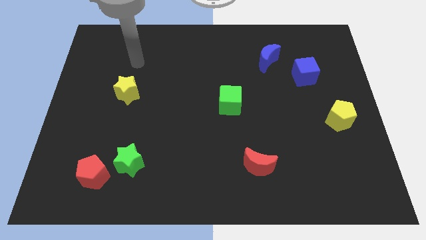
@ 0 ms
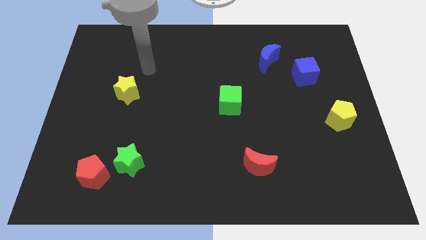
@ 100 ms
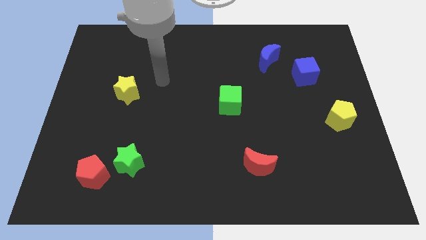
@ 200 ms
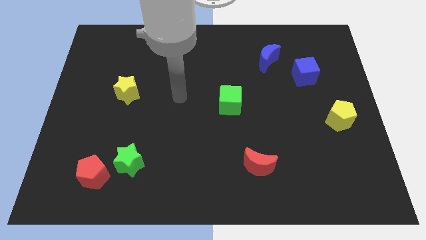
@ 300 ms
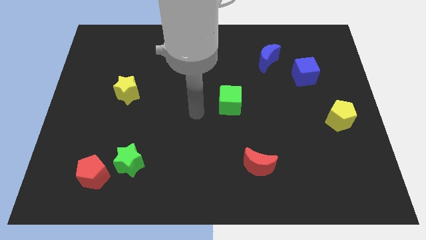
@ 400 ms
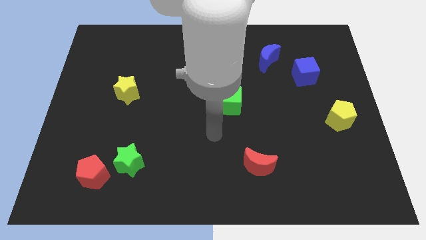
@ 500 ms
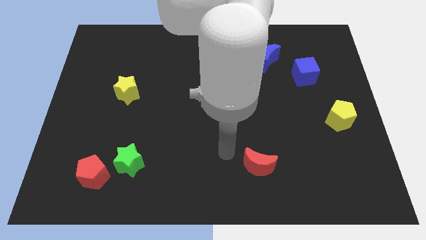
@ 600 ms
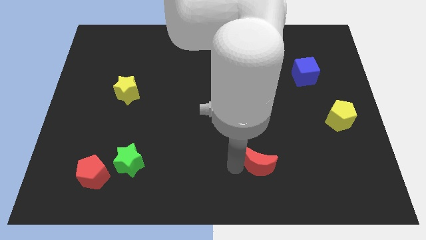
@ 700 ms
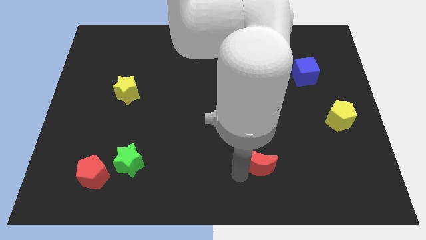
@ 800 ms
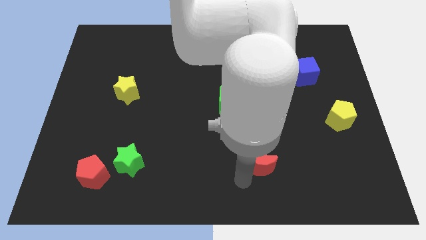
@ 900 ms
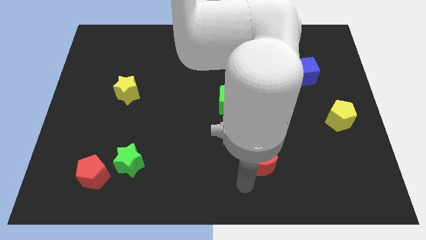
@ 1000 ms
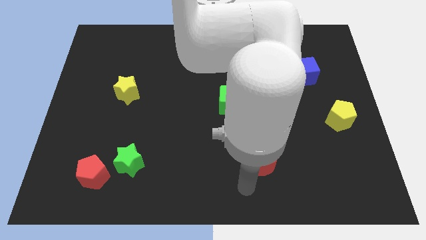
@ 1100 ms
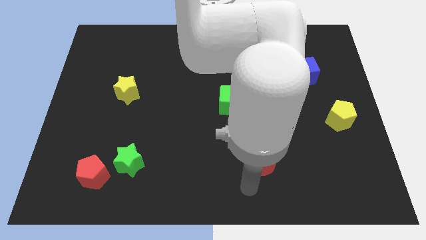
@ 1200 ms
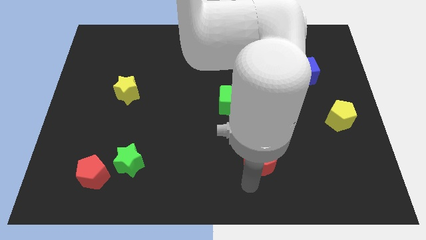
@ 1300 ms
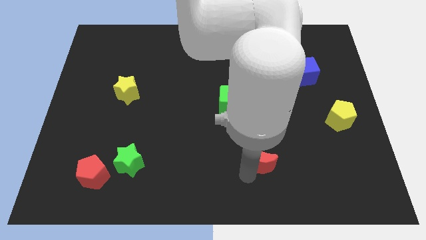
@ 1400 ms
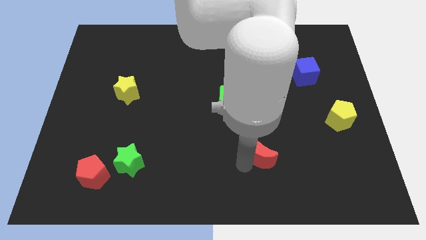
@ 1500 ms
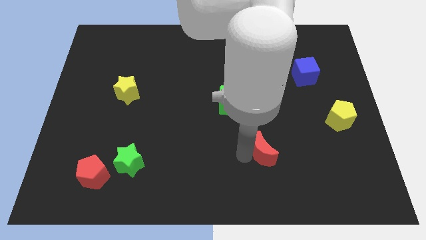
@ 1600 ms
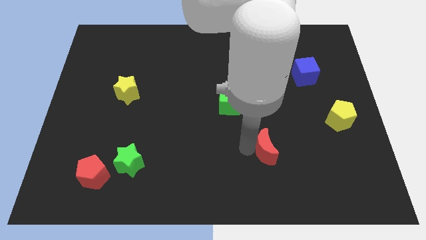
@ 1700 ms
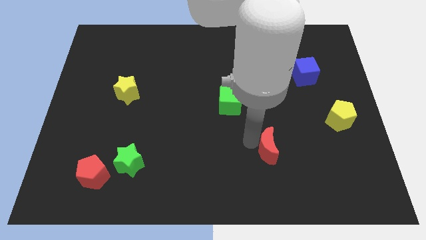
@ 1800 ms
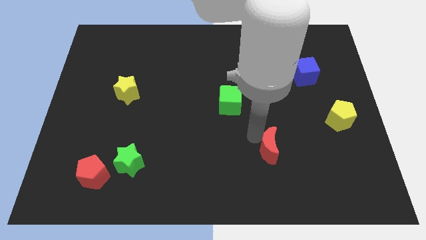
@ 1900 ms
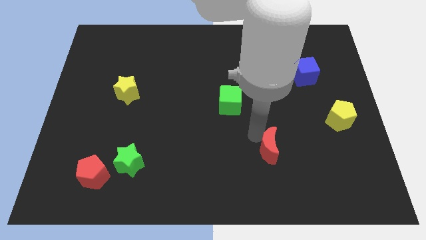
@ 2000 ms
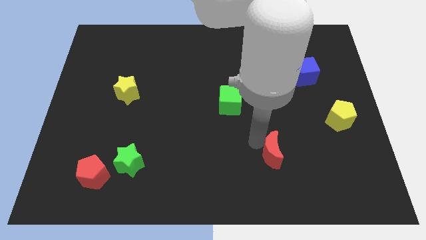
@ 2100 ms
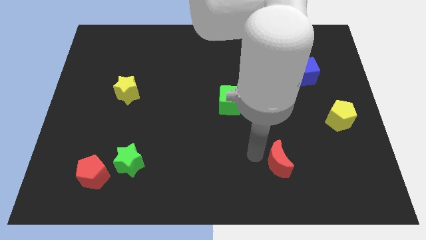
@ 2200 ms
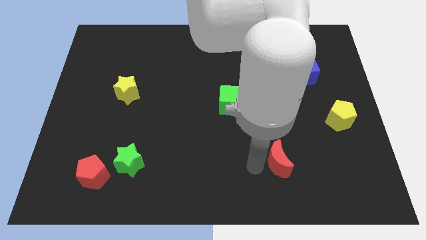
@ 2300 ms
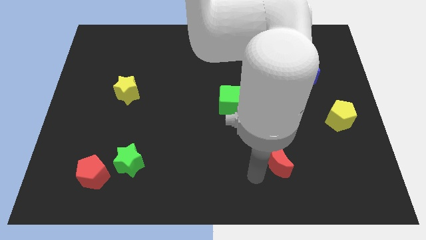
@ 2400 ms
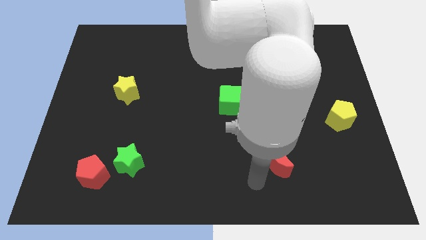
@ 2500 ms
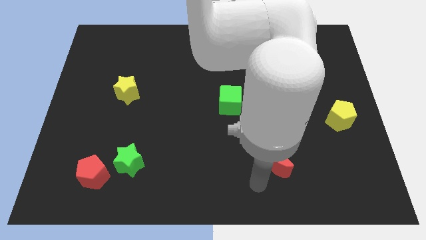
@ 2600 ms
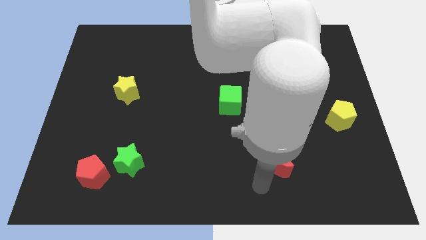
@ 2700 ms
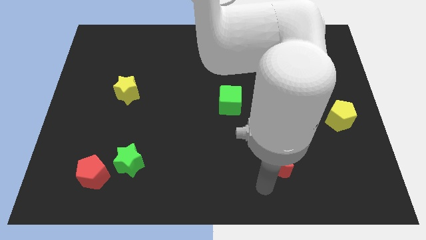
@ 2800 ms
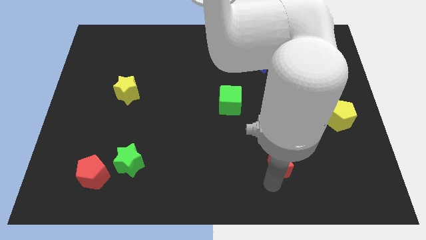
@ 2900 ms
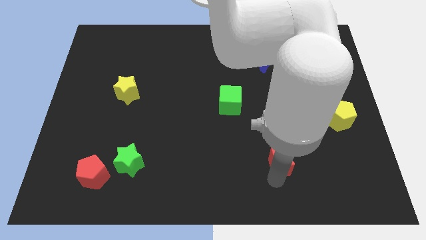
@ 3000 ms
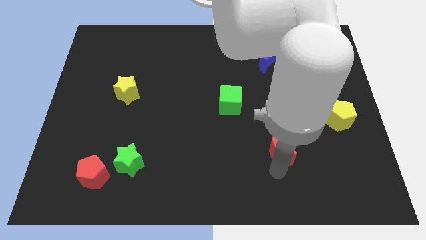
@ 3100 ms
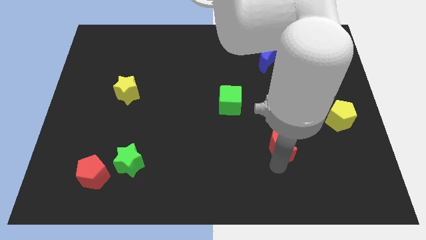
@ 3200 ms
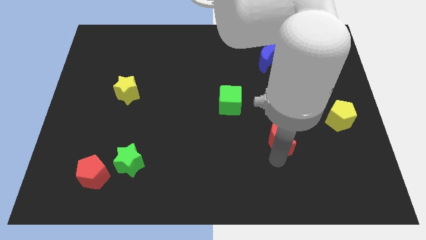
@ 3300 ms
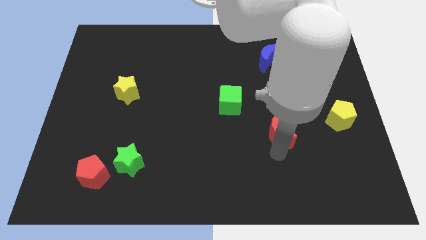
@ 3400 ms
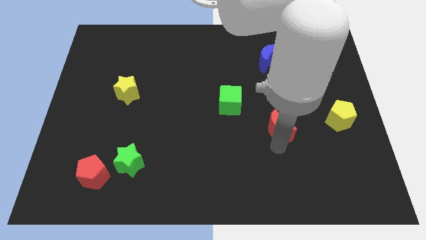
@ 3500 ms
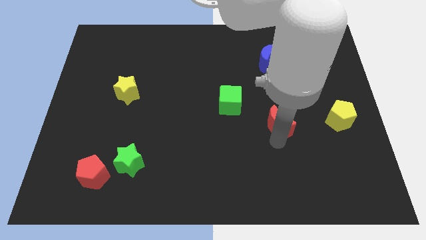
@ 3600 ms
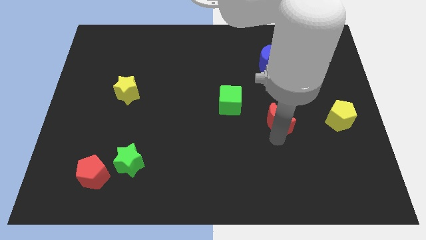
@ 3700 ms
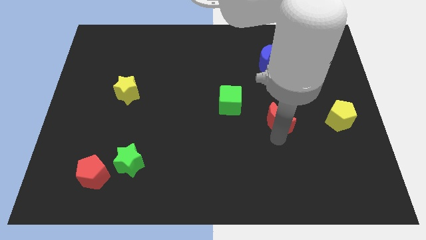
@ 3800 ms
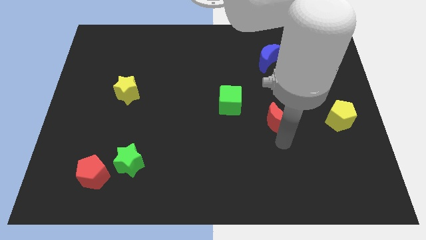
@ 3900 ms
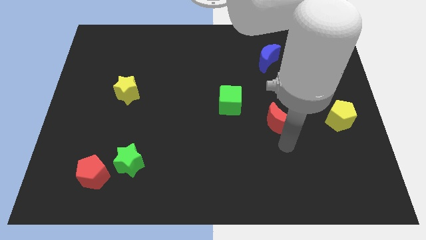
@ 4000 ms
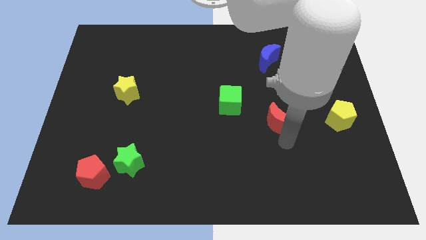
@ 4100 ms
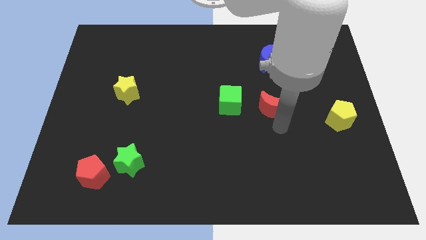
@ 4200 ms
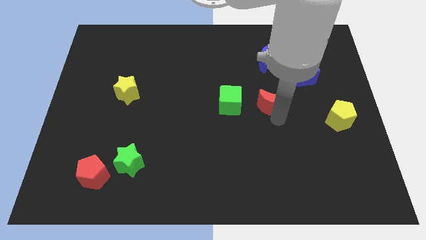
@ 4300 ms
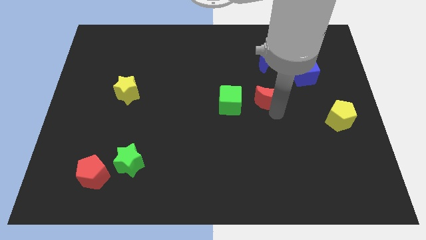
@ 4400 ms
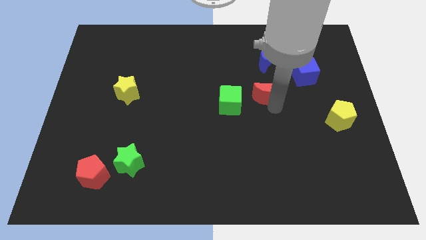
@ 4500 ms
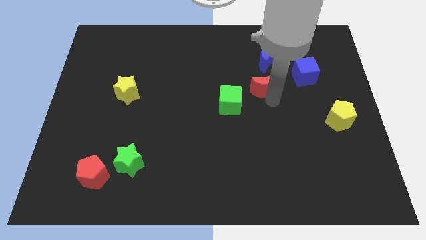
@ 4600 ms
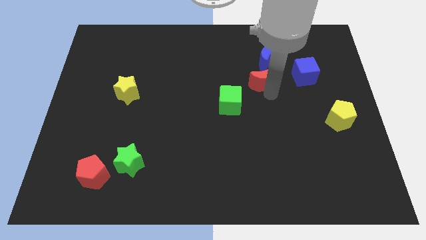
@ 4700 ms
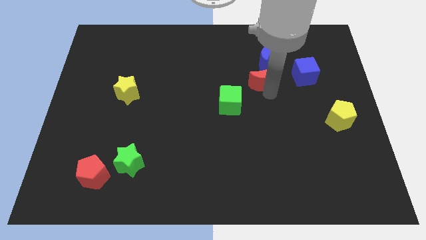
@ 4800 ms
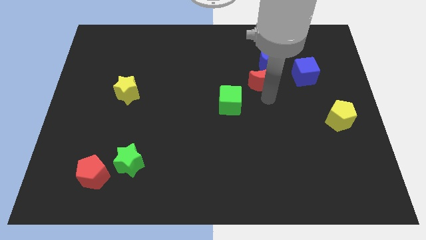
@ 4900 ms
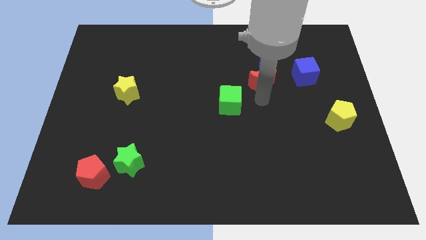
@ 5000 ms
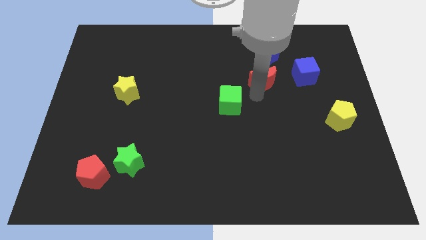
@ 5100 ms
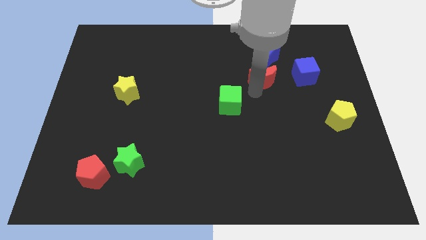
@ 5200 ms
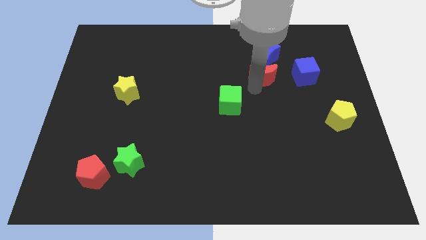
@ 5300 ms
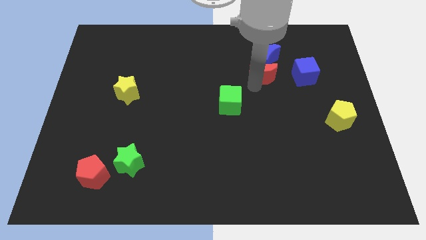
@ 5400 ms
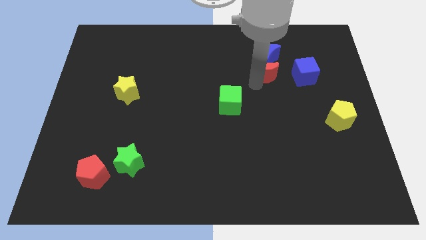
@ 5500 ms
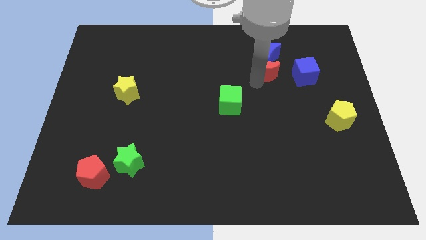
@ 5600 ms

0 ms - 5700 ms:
slide the red moon next to the blue moon

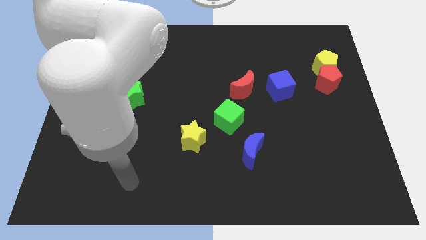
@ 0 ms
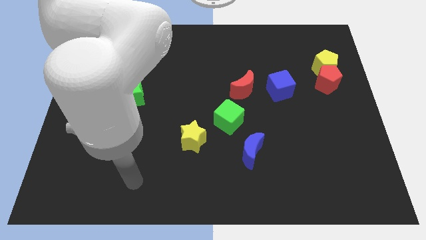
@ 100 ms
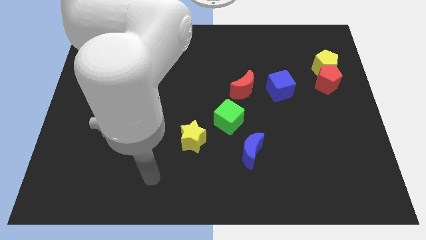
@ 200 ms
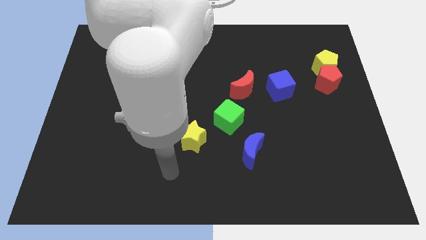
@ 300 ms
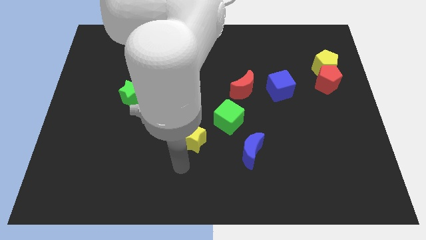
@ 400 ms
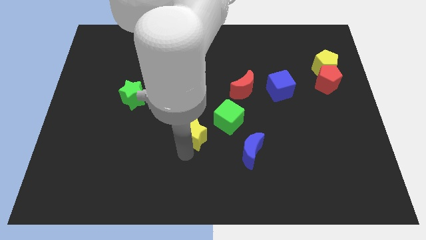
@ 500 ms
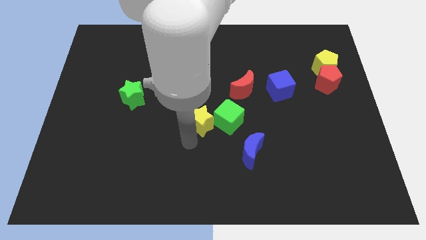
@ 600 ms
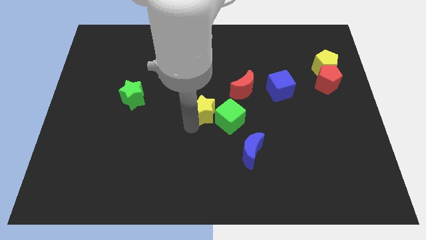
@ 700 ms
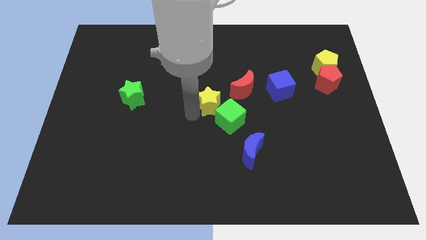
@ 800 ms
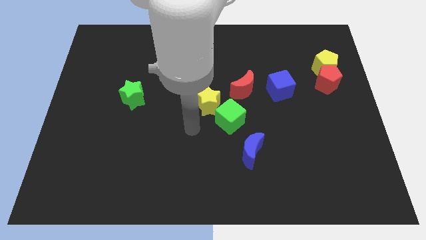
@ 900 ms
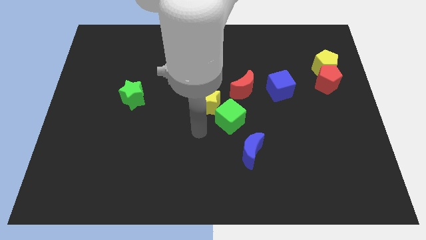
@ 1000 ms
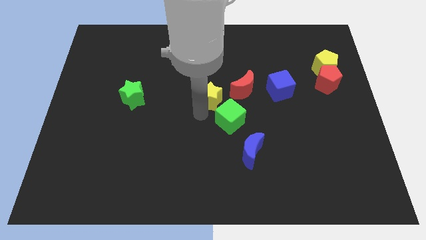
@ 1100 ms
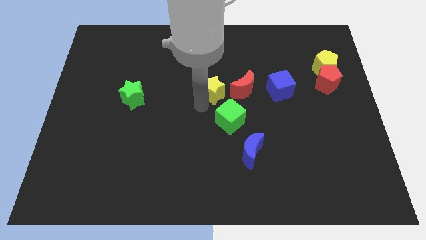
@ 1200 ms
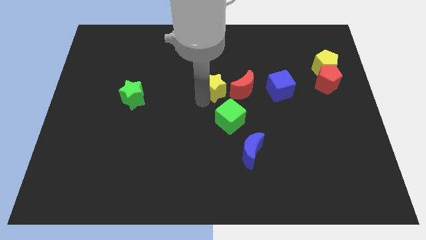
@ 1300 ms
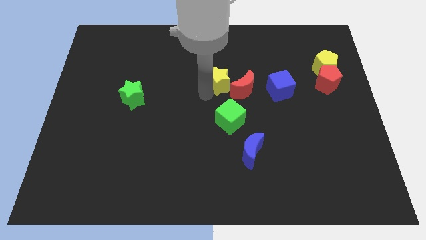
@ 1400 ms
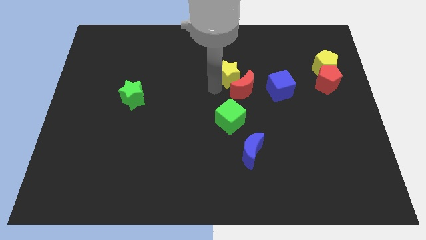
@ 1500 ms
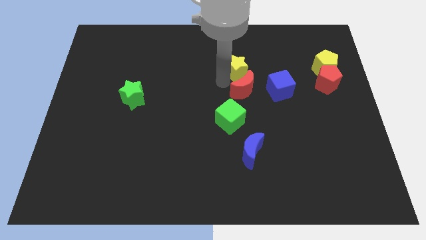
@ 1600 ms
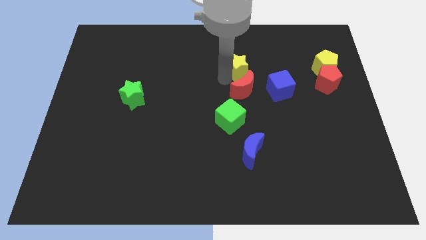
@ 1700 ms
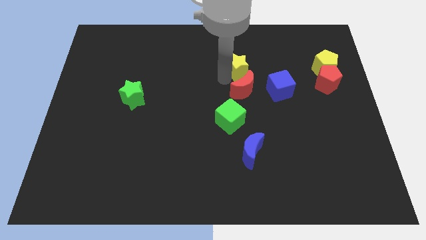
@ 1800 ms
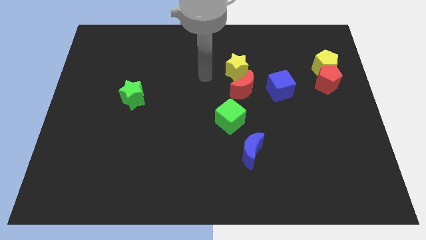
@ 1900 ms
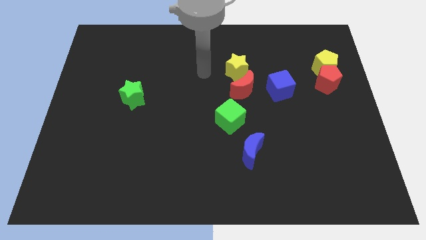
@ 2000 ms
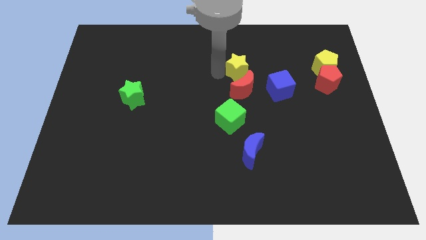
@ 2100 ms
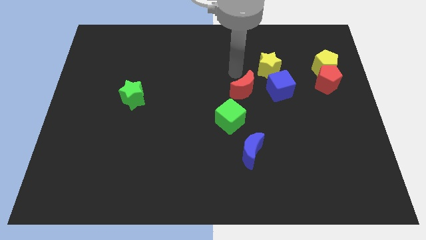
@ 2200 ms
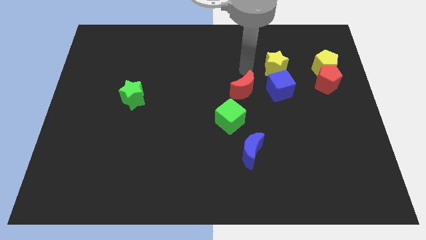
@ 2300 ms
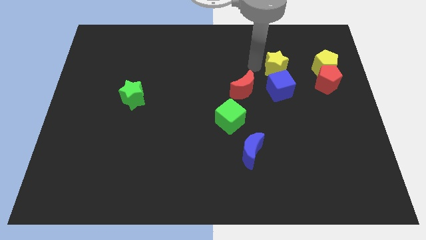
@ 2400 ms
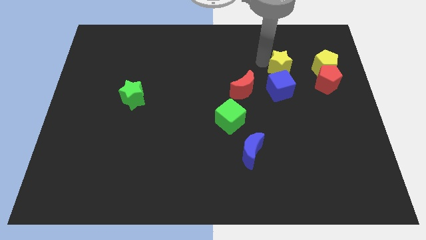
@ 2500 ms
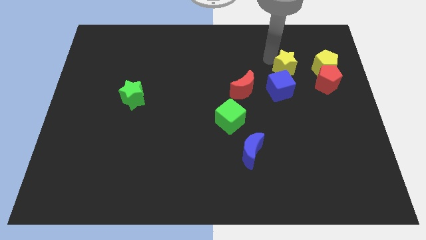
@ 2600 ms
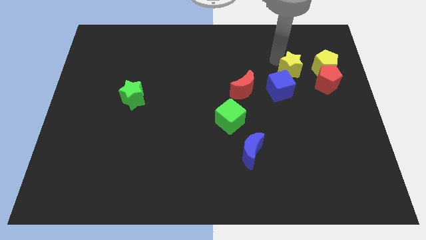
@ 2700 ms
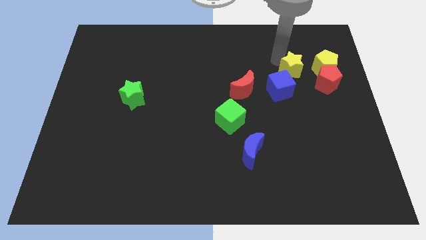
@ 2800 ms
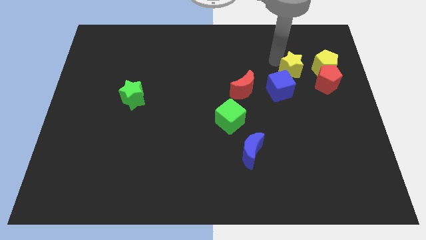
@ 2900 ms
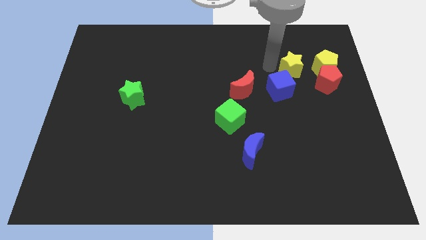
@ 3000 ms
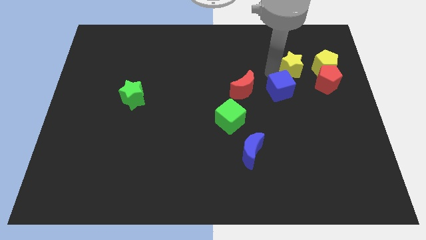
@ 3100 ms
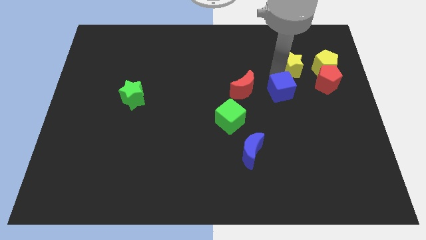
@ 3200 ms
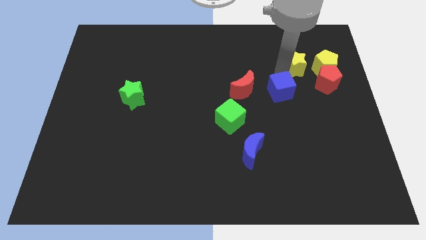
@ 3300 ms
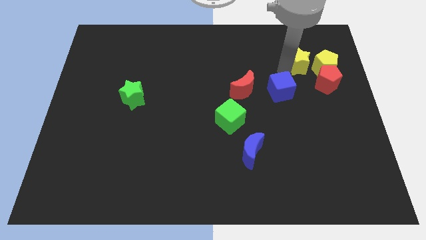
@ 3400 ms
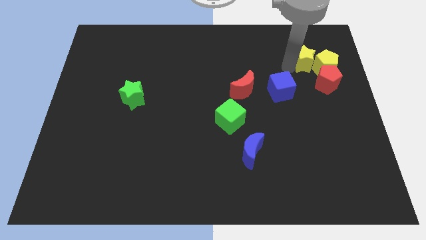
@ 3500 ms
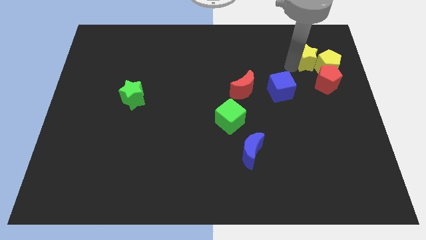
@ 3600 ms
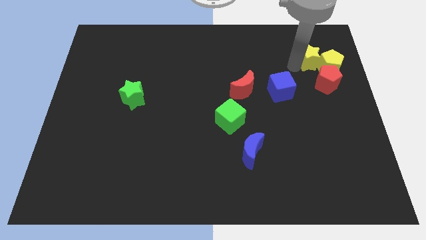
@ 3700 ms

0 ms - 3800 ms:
slide the yellow star next to the yellow pentagon
